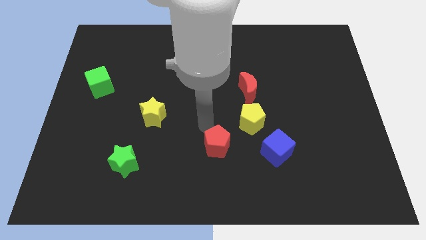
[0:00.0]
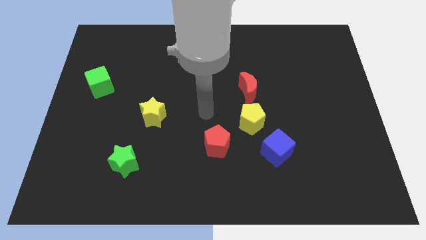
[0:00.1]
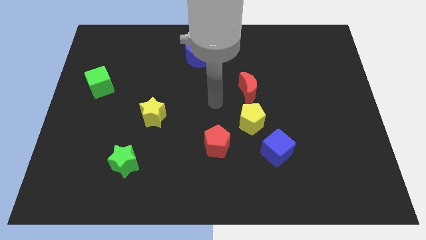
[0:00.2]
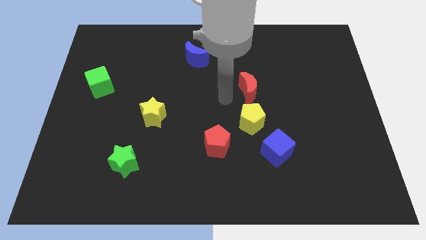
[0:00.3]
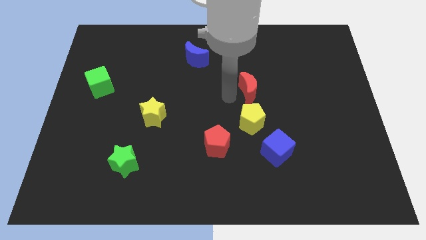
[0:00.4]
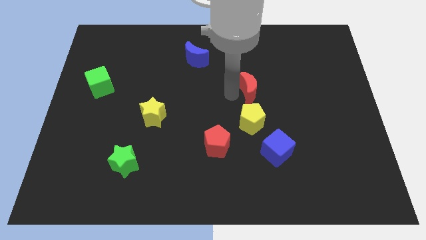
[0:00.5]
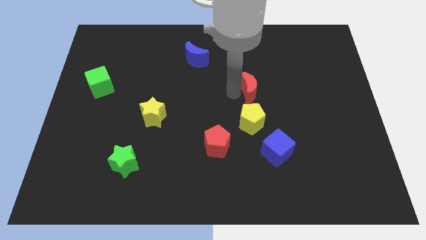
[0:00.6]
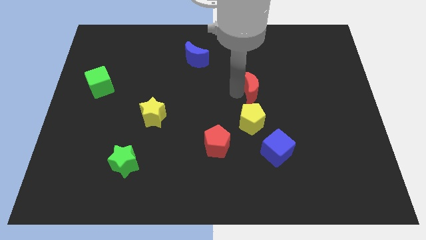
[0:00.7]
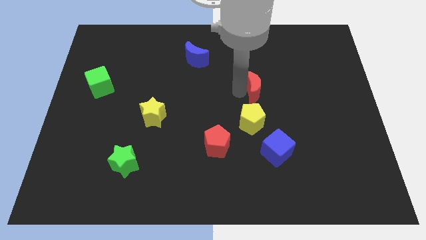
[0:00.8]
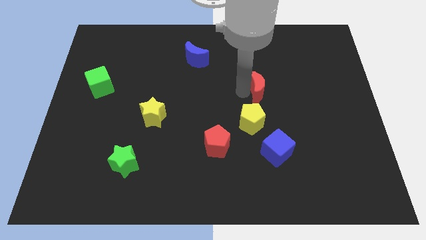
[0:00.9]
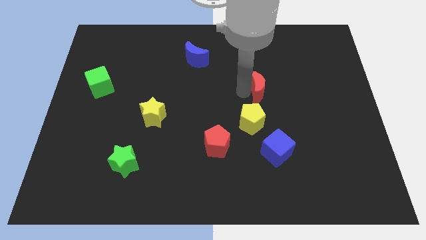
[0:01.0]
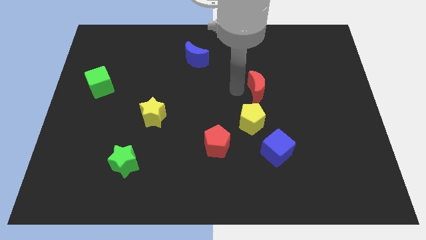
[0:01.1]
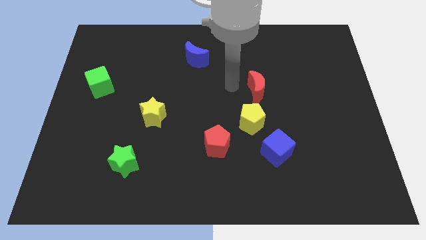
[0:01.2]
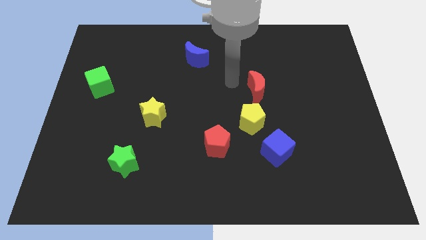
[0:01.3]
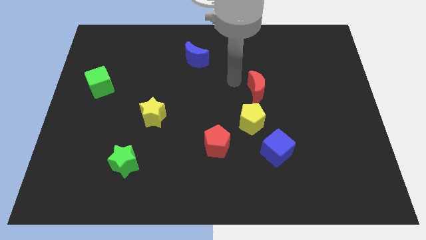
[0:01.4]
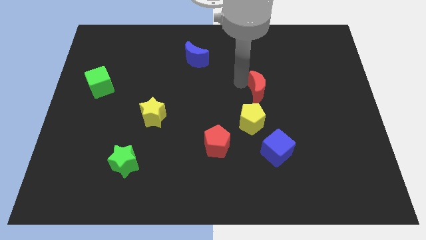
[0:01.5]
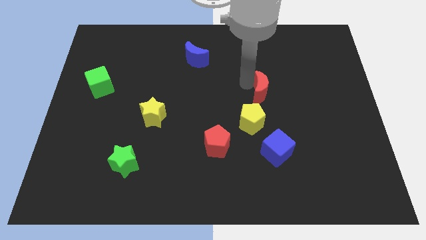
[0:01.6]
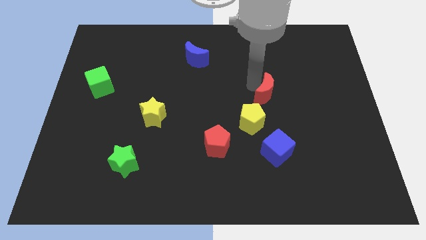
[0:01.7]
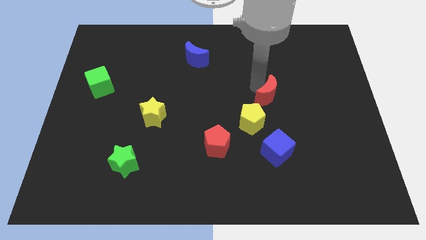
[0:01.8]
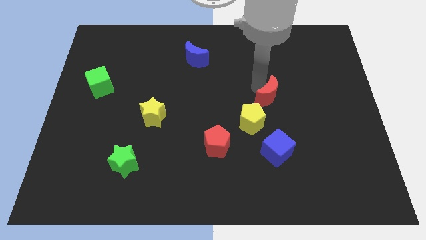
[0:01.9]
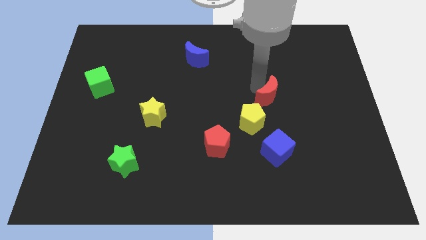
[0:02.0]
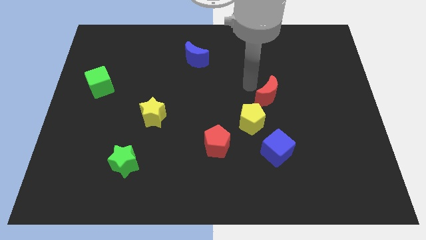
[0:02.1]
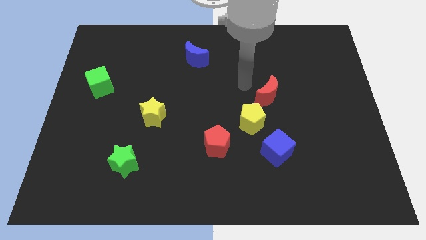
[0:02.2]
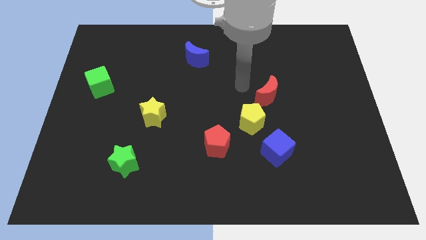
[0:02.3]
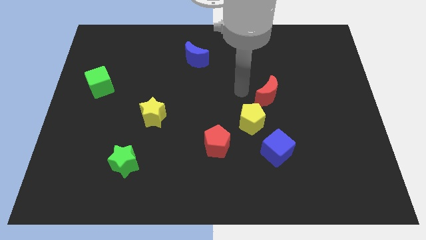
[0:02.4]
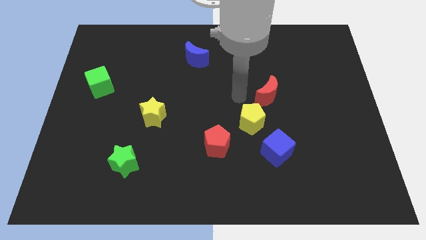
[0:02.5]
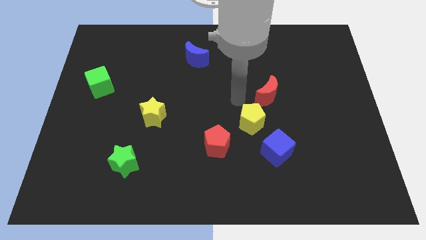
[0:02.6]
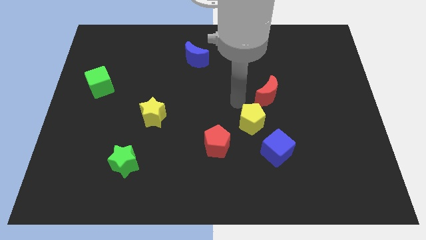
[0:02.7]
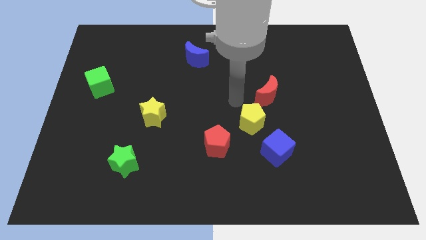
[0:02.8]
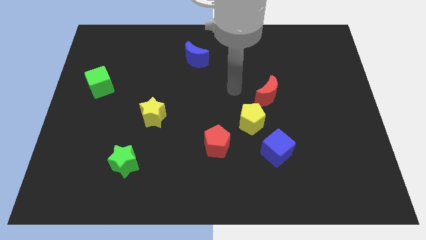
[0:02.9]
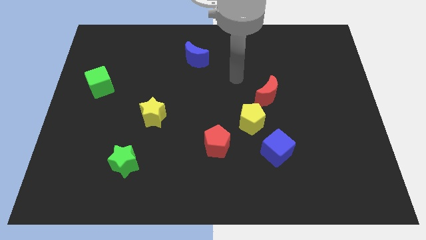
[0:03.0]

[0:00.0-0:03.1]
move the red moon to the top right of the yellow pentagon

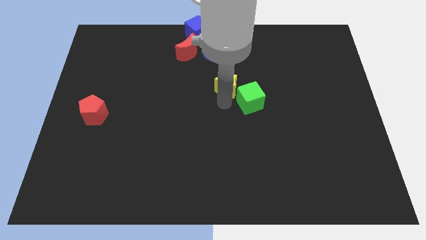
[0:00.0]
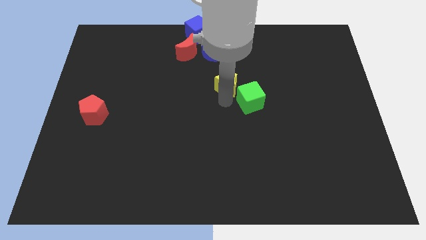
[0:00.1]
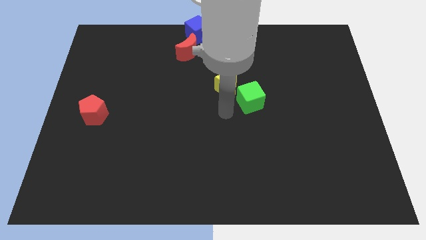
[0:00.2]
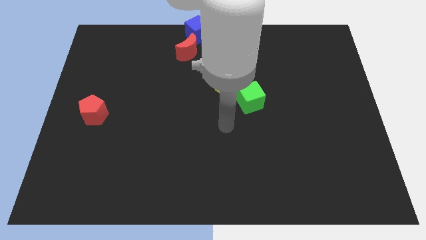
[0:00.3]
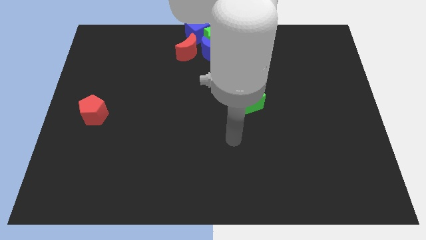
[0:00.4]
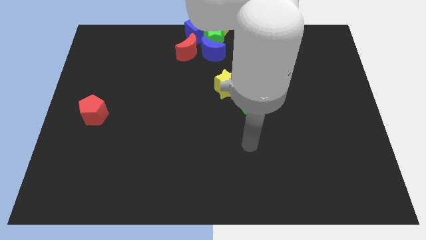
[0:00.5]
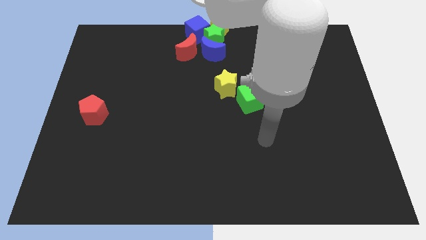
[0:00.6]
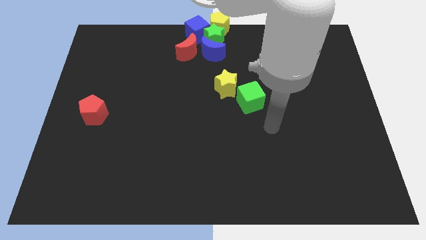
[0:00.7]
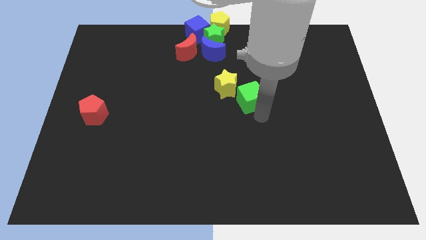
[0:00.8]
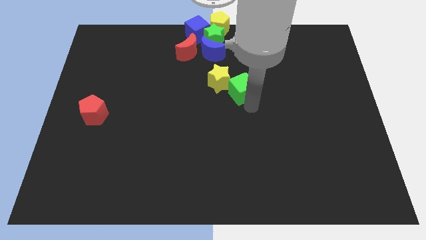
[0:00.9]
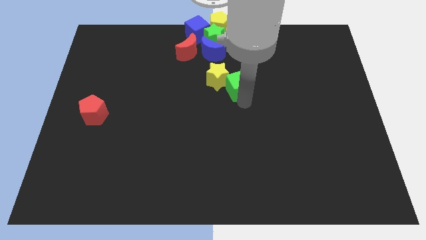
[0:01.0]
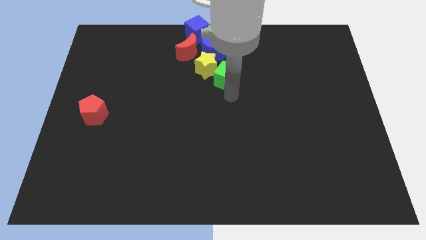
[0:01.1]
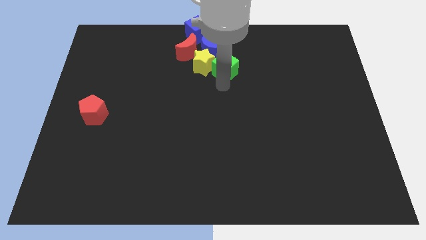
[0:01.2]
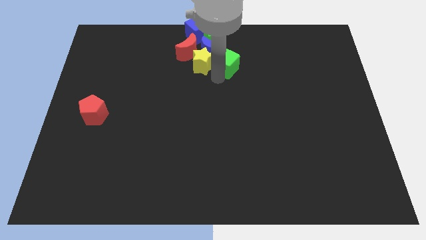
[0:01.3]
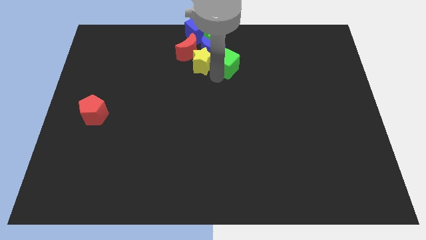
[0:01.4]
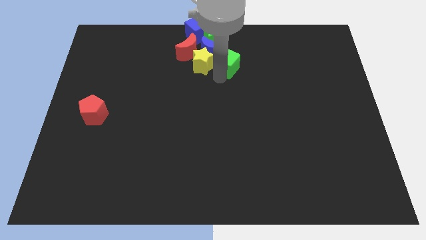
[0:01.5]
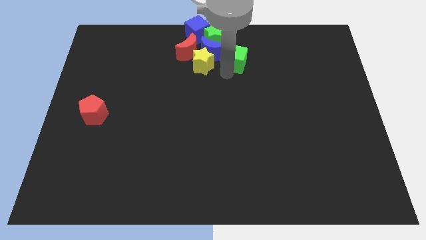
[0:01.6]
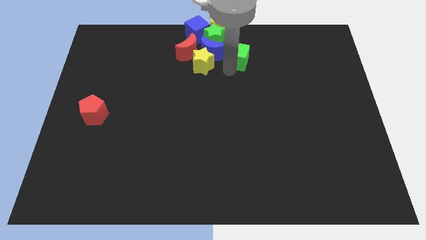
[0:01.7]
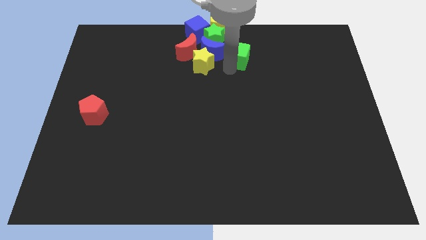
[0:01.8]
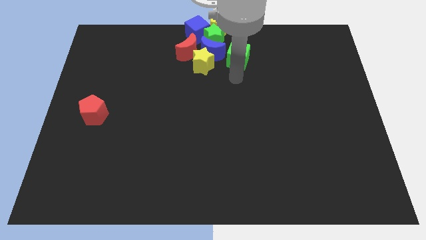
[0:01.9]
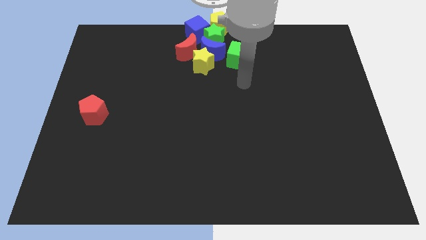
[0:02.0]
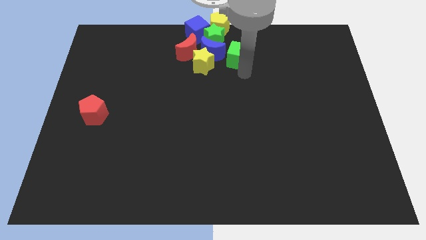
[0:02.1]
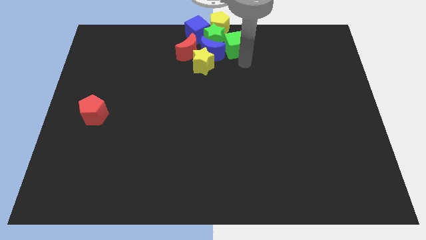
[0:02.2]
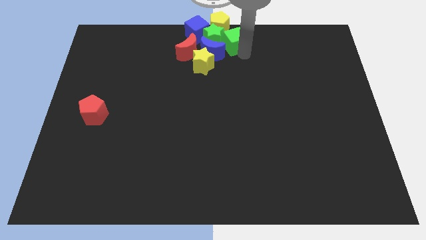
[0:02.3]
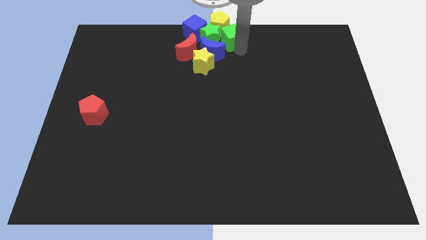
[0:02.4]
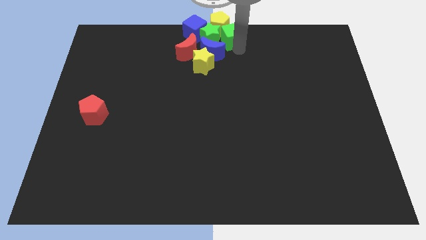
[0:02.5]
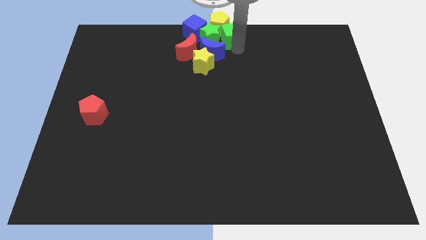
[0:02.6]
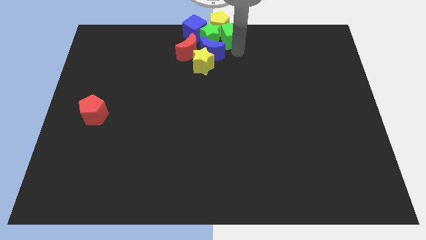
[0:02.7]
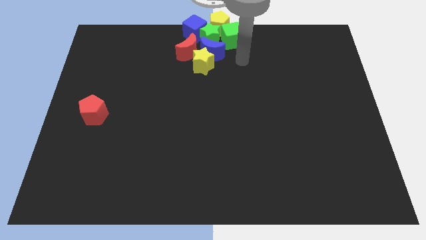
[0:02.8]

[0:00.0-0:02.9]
place the green cube right to the green star

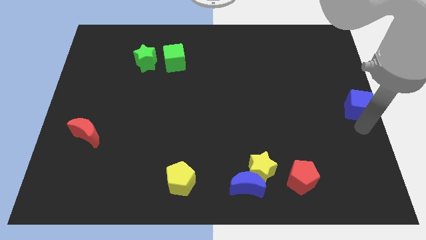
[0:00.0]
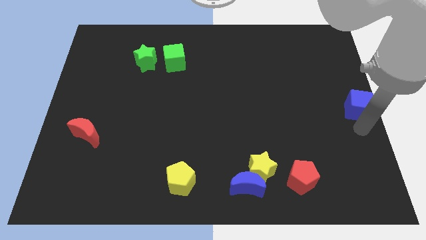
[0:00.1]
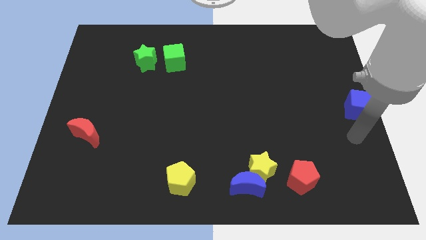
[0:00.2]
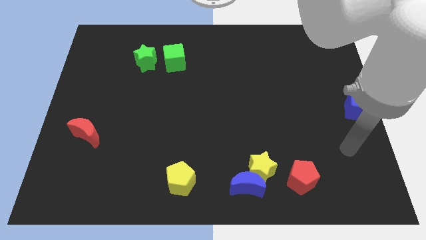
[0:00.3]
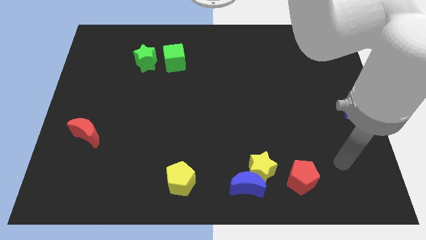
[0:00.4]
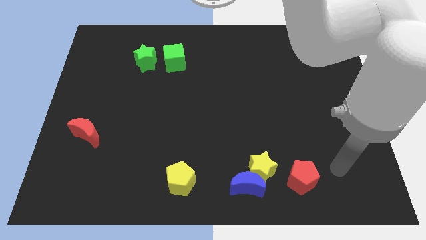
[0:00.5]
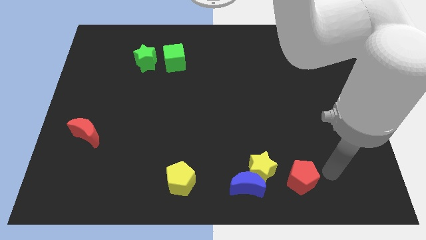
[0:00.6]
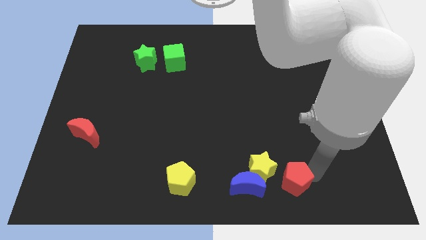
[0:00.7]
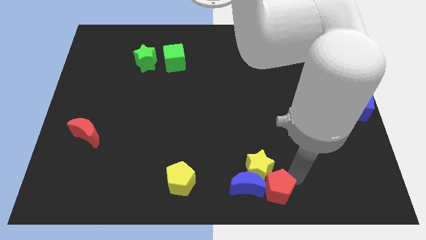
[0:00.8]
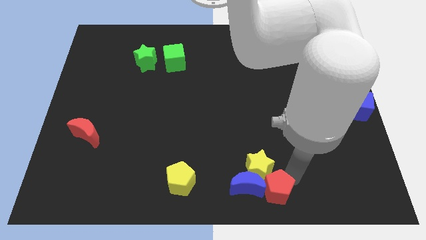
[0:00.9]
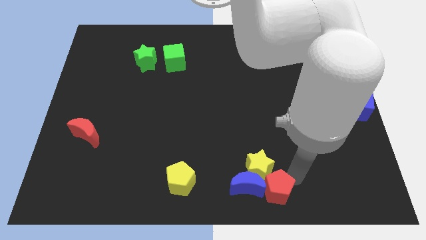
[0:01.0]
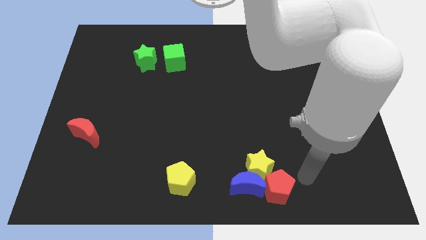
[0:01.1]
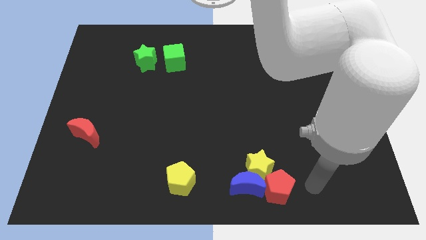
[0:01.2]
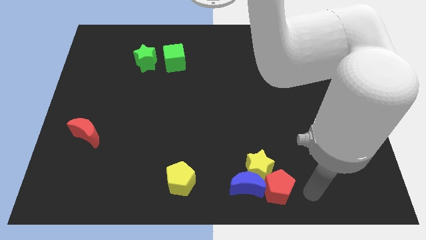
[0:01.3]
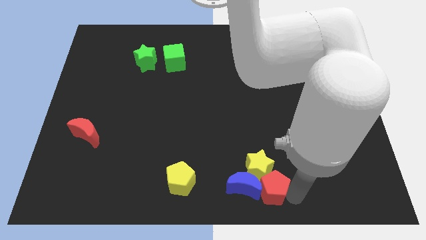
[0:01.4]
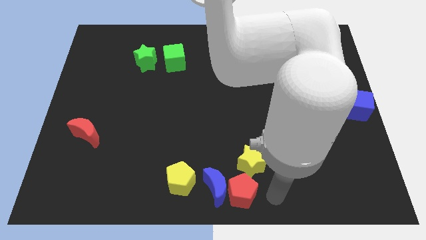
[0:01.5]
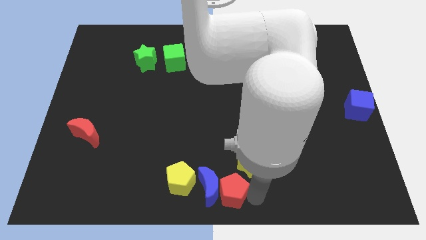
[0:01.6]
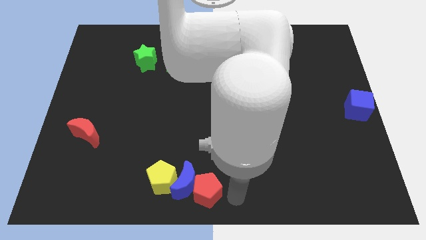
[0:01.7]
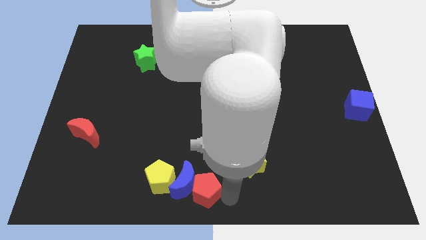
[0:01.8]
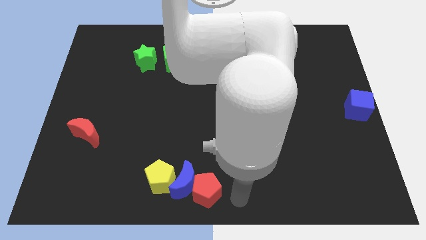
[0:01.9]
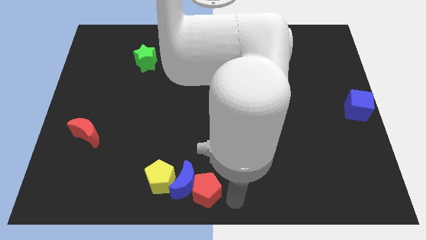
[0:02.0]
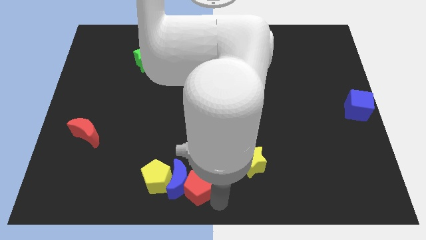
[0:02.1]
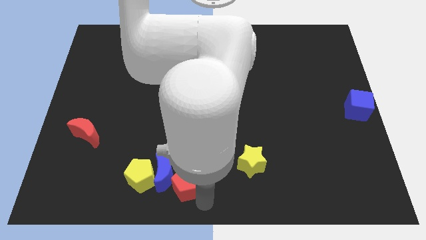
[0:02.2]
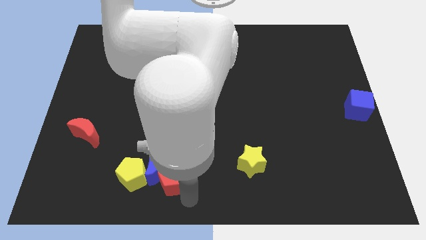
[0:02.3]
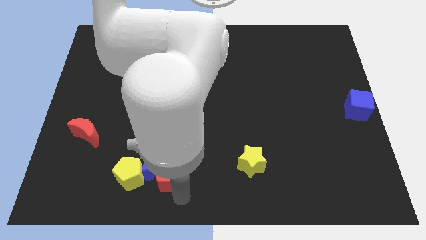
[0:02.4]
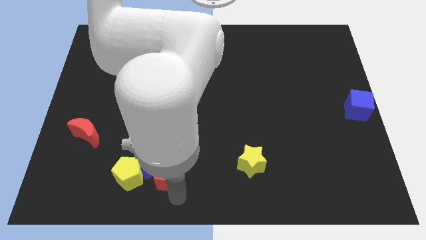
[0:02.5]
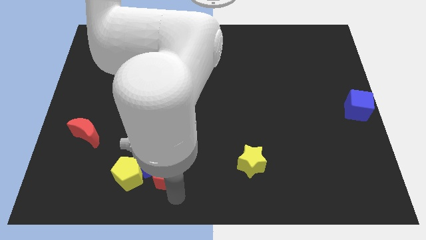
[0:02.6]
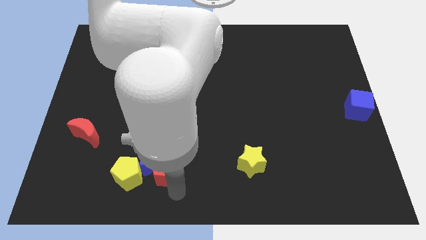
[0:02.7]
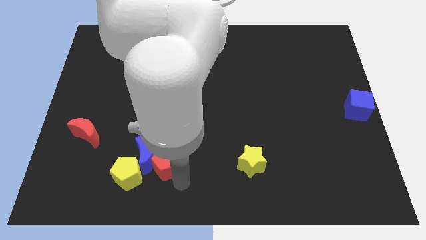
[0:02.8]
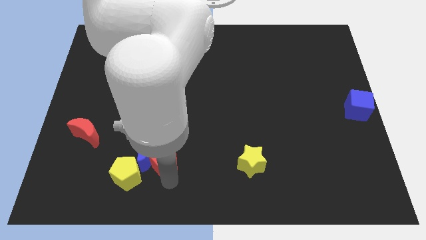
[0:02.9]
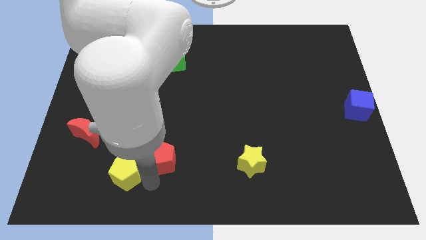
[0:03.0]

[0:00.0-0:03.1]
push the red pentagon to the left side slightly
